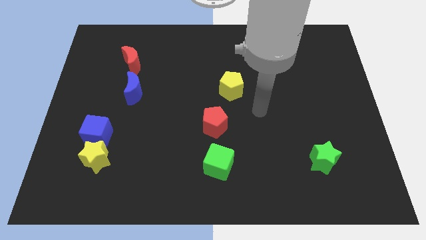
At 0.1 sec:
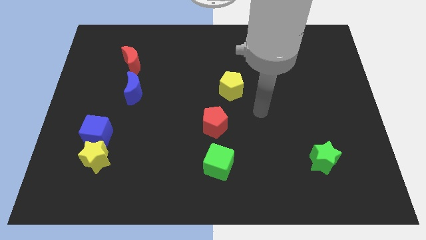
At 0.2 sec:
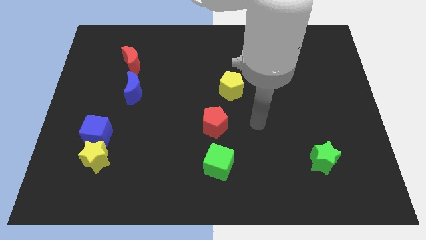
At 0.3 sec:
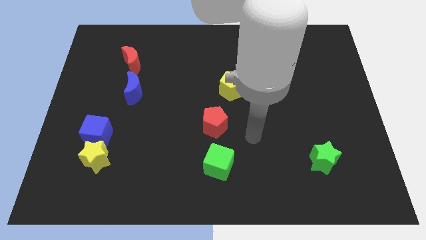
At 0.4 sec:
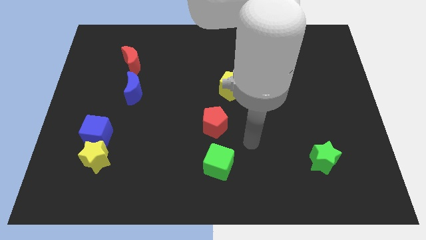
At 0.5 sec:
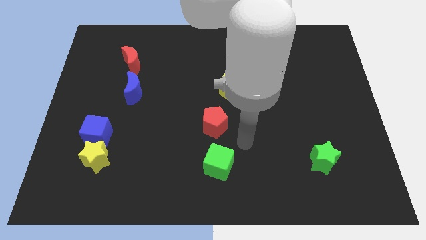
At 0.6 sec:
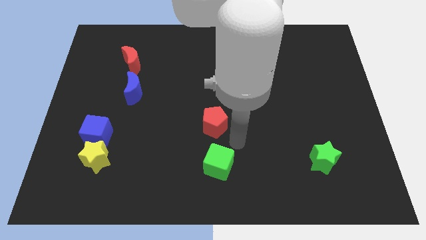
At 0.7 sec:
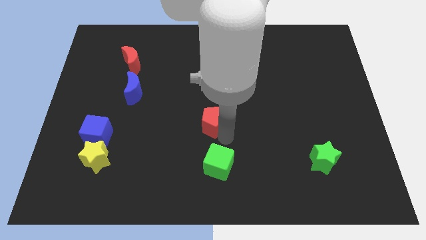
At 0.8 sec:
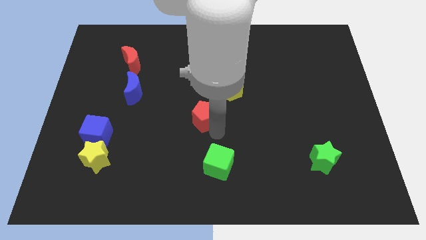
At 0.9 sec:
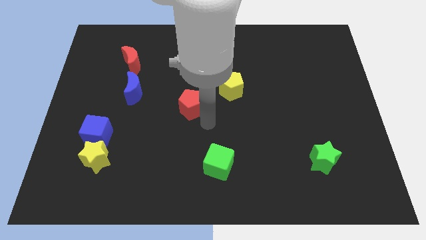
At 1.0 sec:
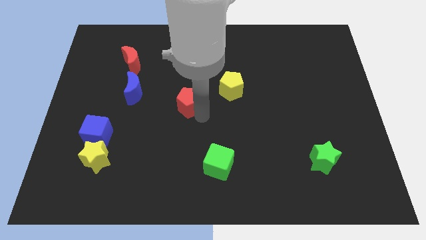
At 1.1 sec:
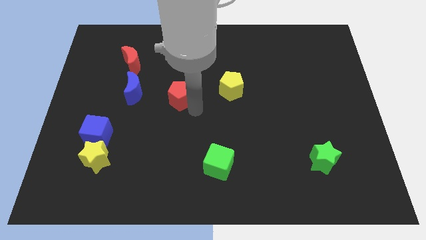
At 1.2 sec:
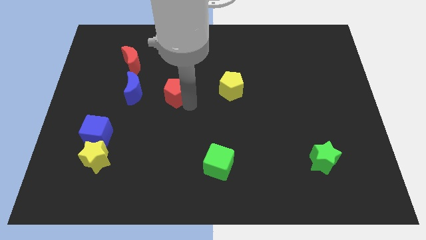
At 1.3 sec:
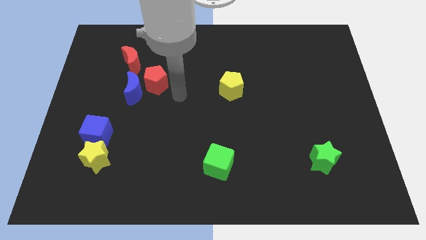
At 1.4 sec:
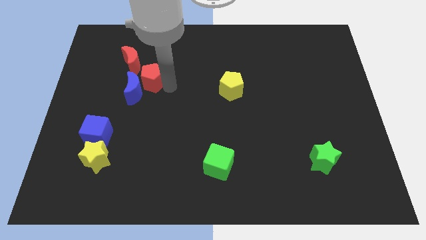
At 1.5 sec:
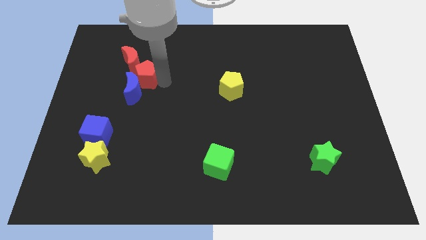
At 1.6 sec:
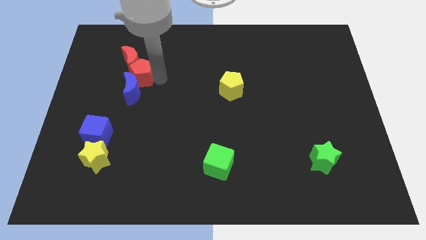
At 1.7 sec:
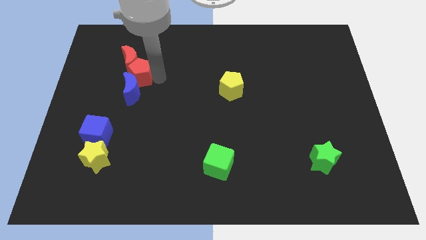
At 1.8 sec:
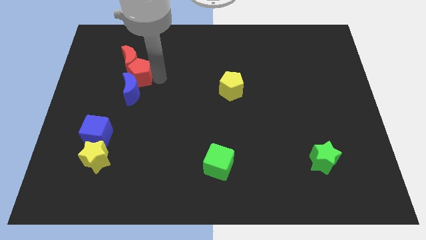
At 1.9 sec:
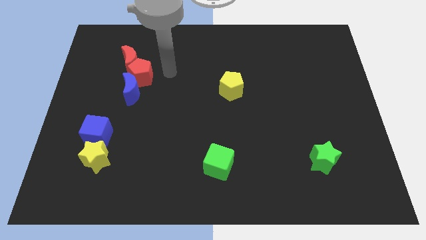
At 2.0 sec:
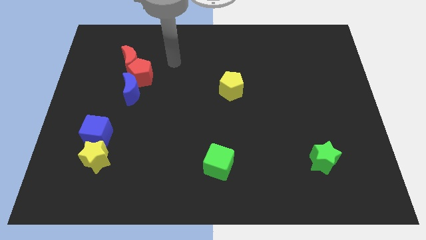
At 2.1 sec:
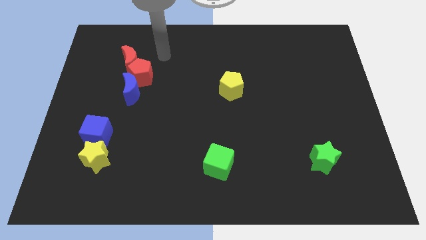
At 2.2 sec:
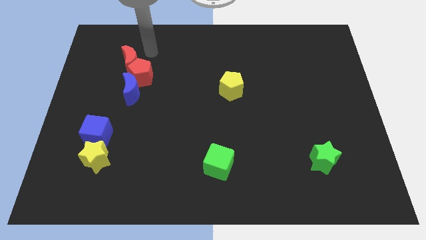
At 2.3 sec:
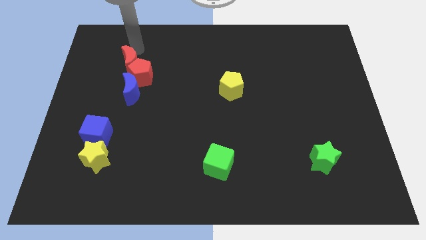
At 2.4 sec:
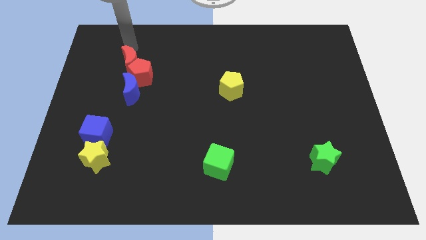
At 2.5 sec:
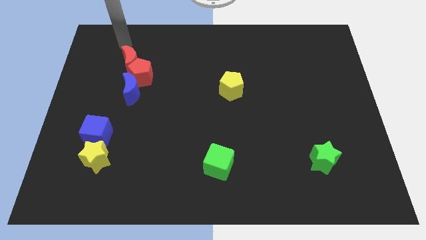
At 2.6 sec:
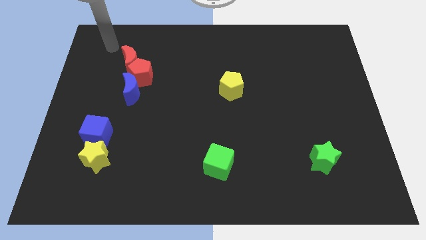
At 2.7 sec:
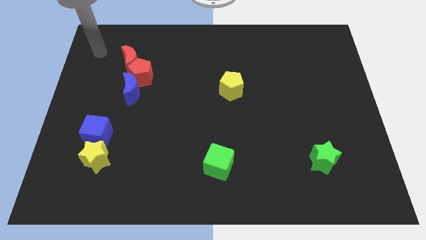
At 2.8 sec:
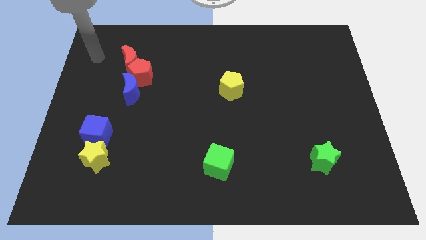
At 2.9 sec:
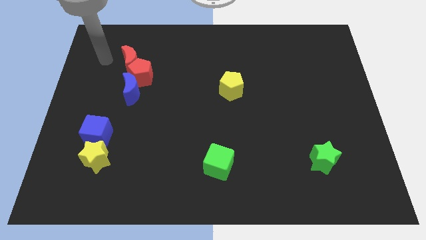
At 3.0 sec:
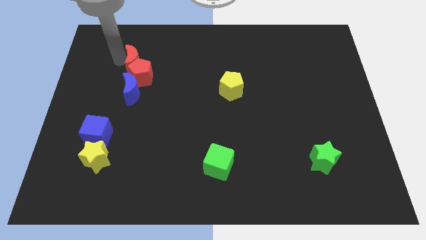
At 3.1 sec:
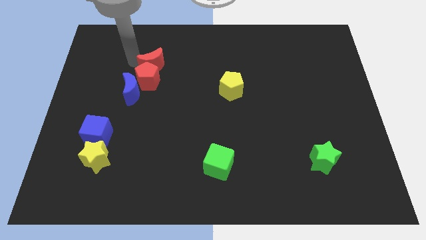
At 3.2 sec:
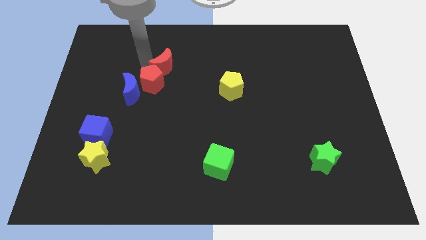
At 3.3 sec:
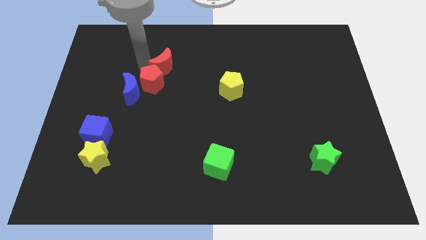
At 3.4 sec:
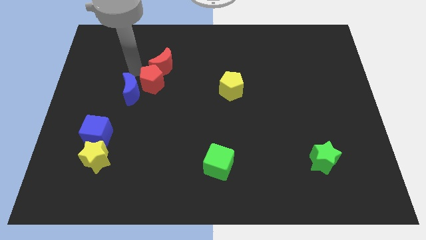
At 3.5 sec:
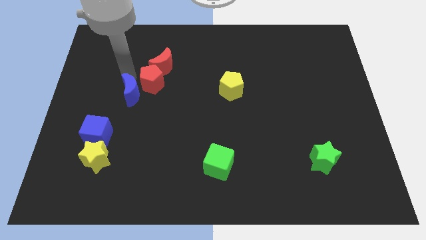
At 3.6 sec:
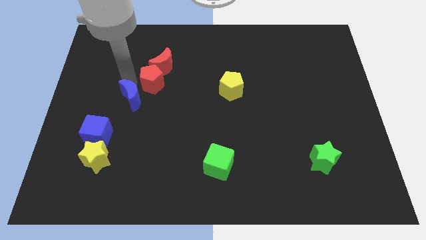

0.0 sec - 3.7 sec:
move the red pentagon into the bottom of the red moon

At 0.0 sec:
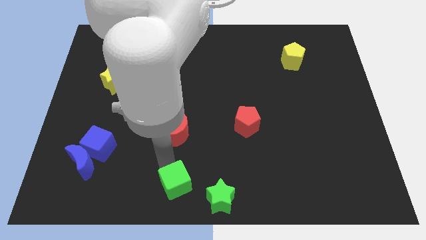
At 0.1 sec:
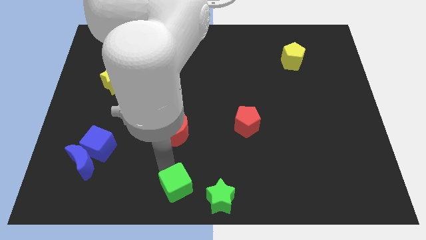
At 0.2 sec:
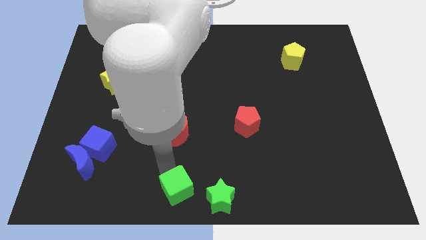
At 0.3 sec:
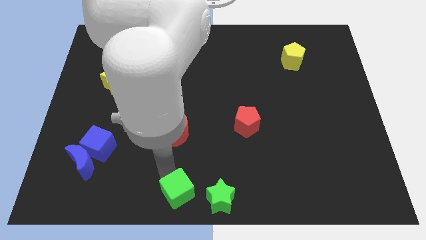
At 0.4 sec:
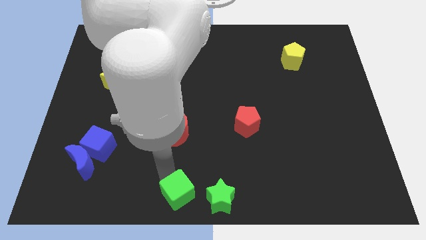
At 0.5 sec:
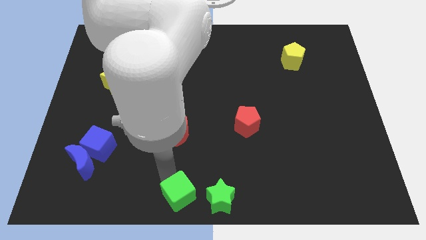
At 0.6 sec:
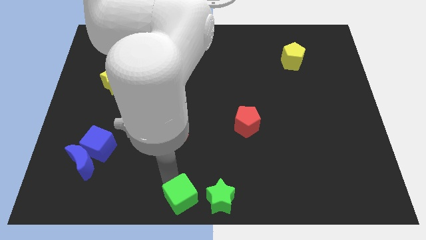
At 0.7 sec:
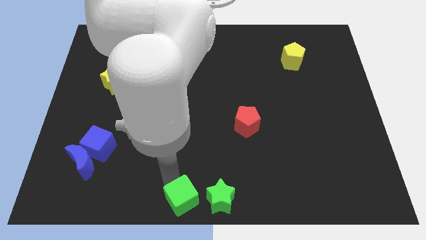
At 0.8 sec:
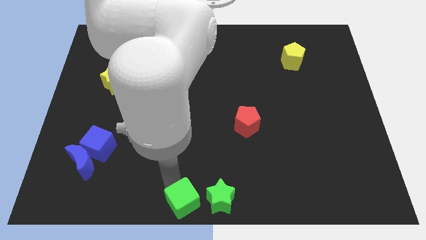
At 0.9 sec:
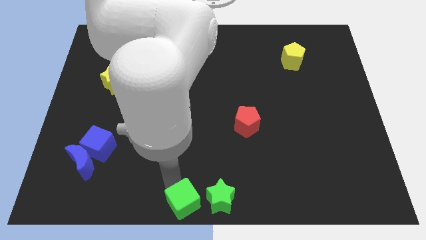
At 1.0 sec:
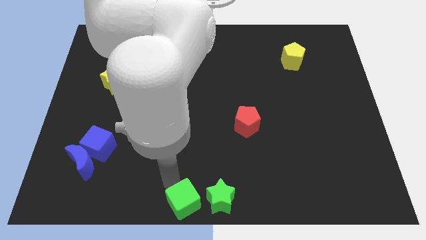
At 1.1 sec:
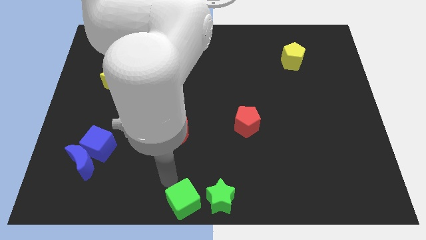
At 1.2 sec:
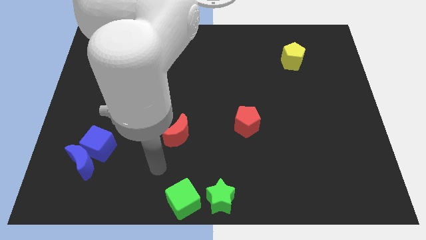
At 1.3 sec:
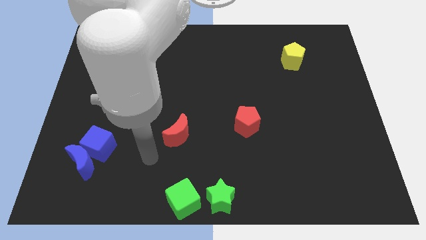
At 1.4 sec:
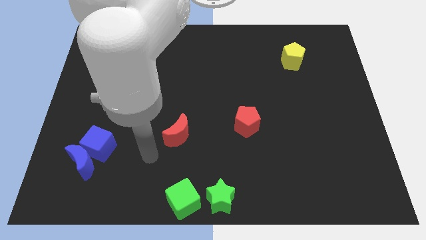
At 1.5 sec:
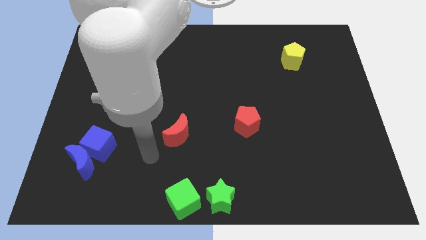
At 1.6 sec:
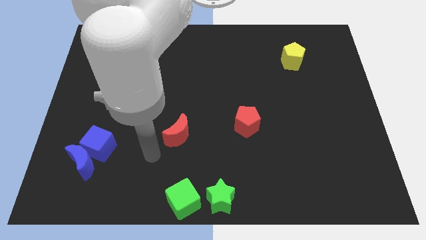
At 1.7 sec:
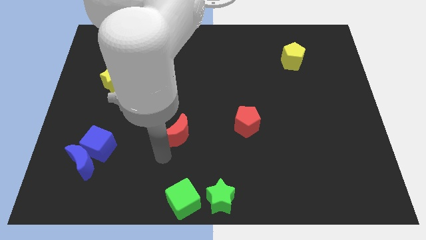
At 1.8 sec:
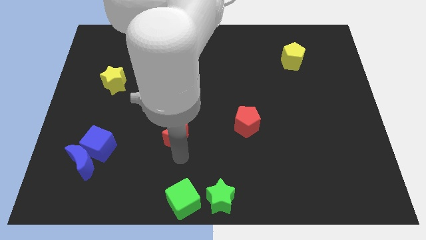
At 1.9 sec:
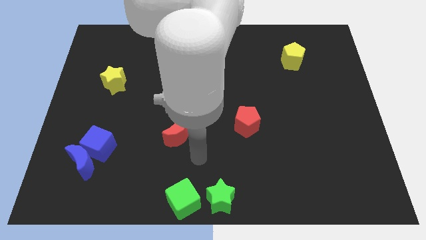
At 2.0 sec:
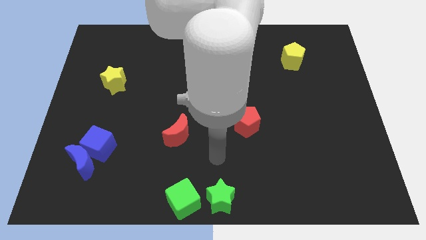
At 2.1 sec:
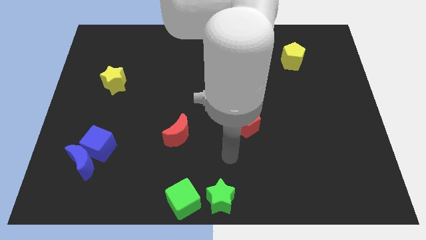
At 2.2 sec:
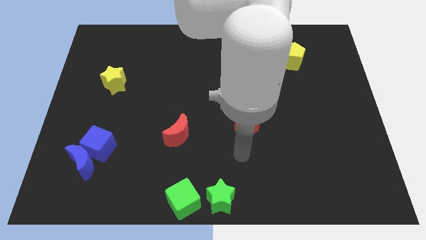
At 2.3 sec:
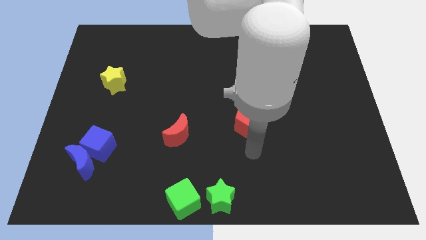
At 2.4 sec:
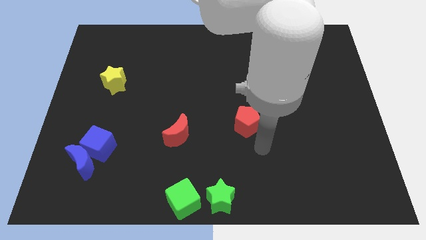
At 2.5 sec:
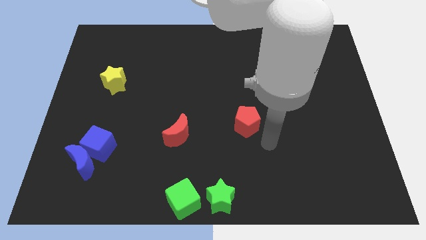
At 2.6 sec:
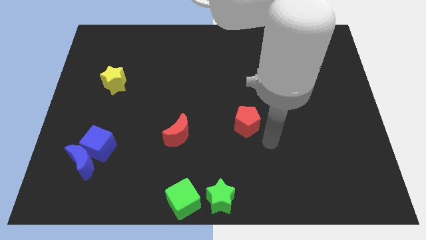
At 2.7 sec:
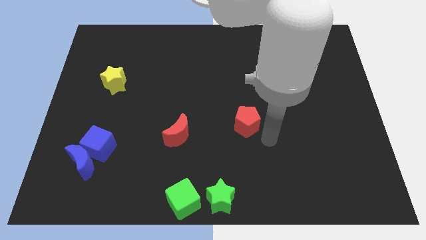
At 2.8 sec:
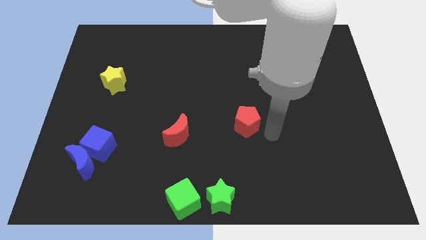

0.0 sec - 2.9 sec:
push the green cube vertically to red moon

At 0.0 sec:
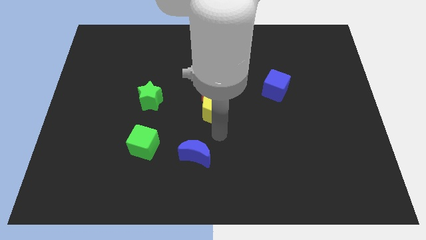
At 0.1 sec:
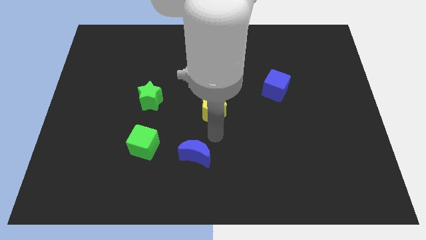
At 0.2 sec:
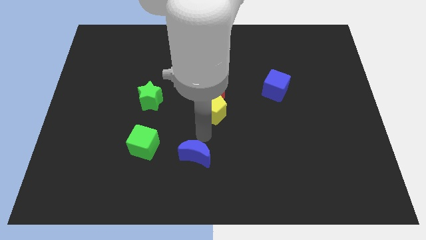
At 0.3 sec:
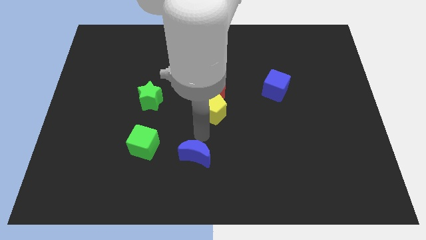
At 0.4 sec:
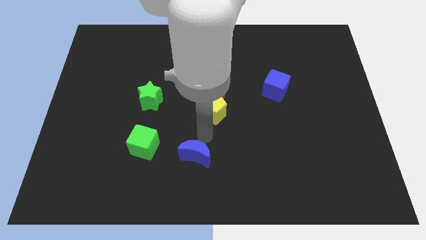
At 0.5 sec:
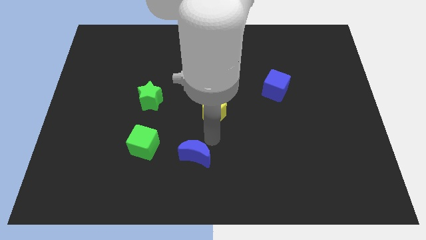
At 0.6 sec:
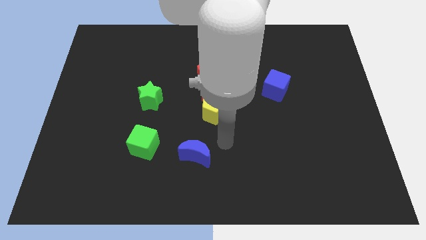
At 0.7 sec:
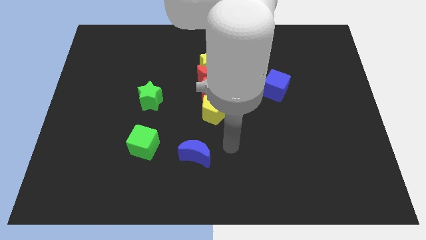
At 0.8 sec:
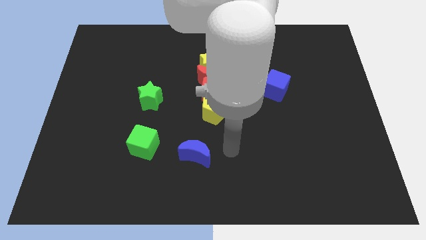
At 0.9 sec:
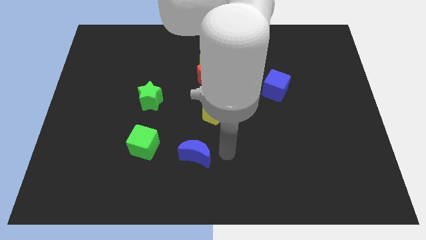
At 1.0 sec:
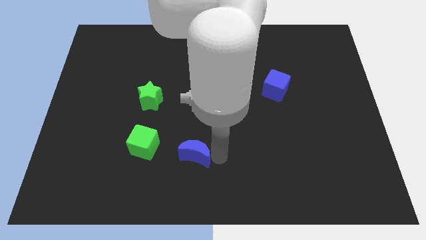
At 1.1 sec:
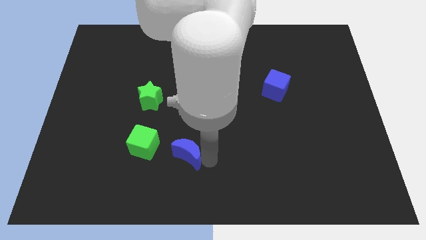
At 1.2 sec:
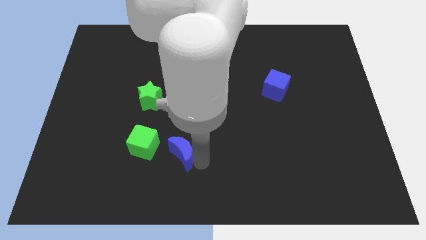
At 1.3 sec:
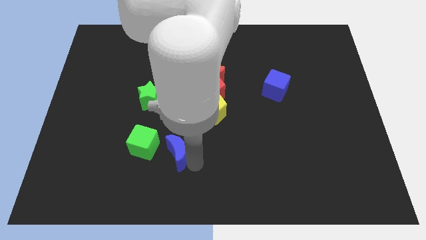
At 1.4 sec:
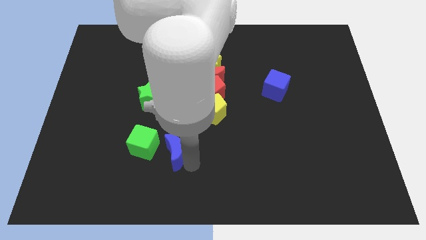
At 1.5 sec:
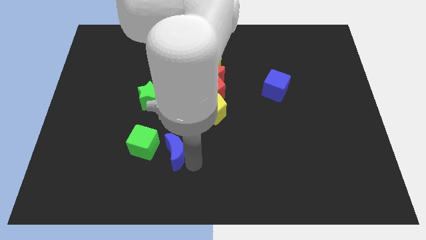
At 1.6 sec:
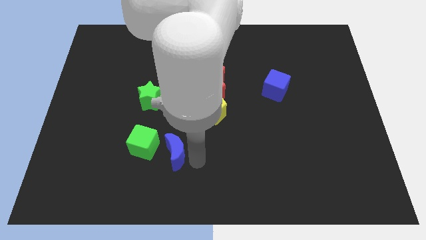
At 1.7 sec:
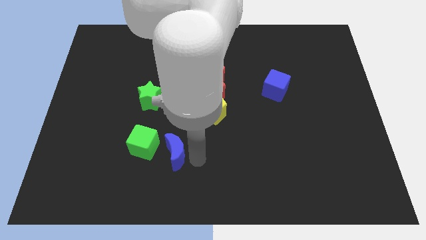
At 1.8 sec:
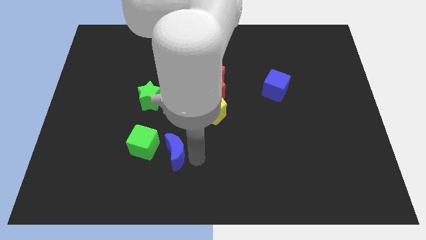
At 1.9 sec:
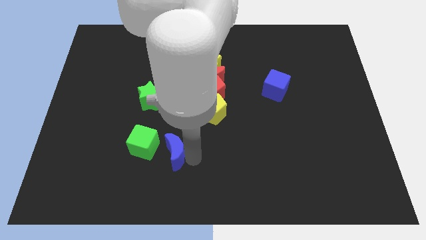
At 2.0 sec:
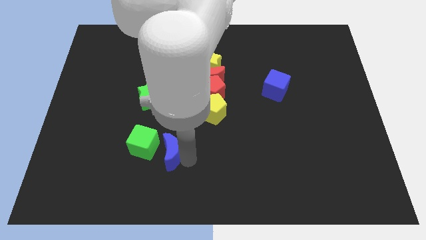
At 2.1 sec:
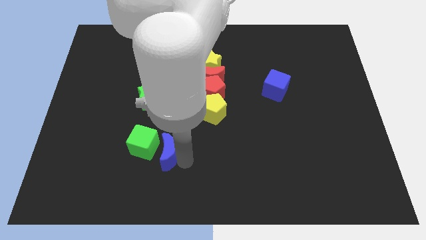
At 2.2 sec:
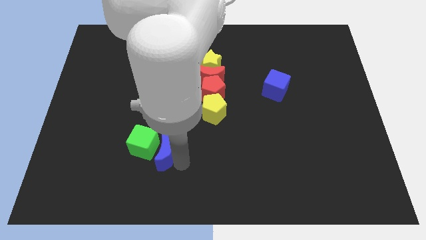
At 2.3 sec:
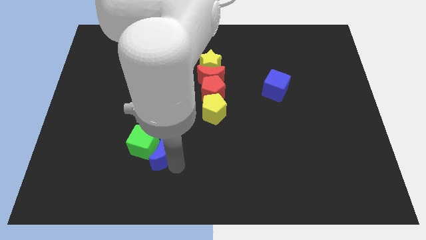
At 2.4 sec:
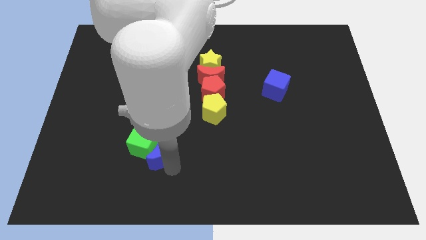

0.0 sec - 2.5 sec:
move the blue crescent right to the green cube
